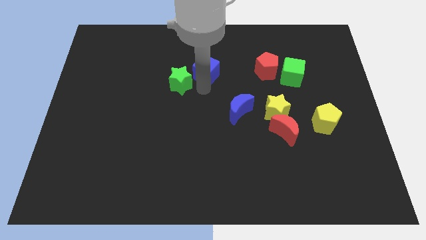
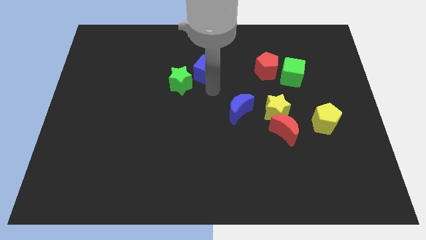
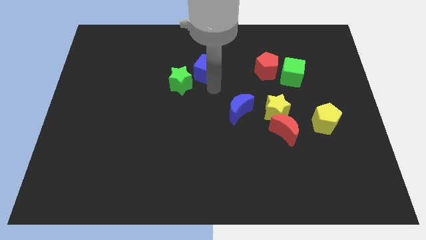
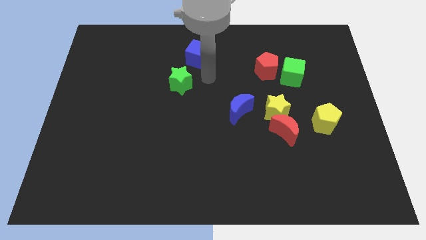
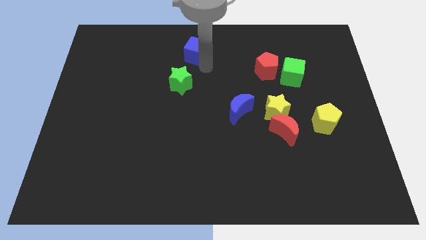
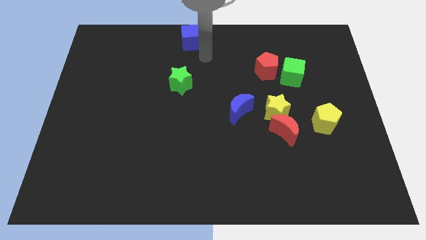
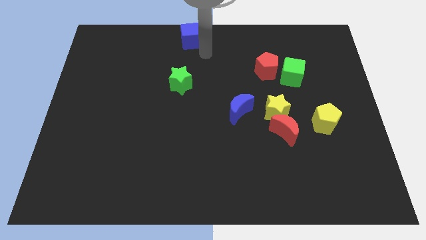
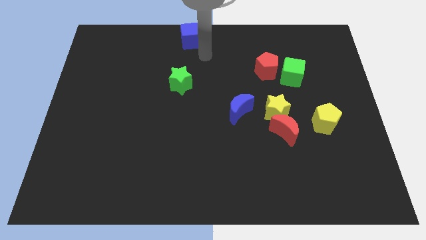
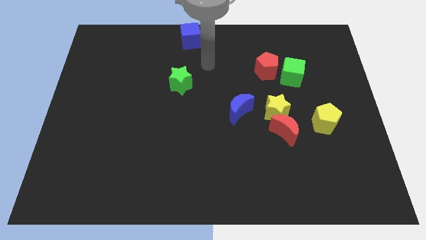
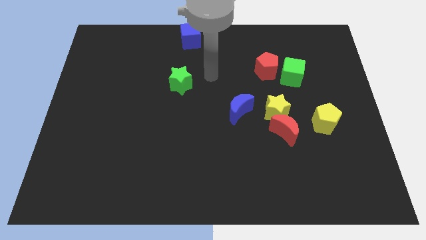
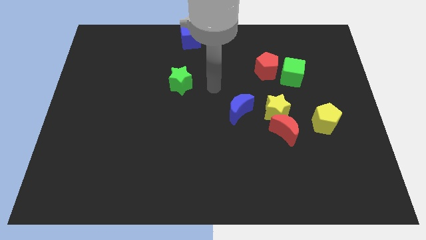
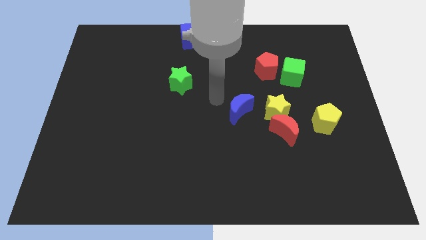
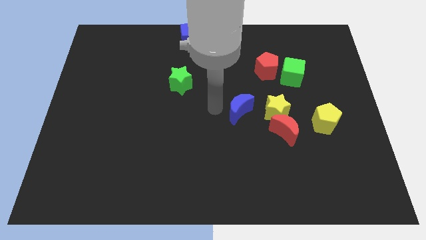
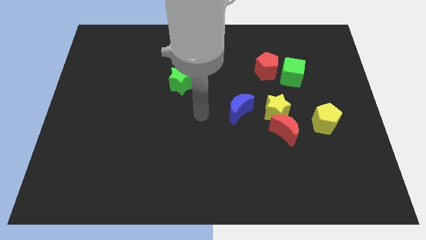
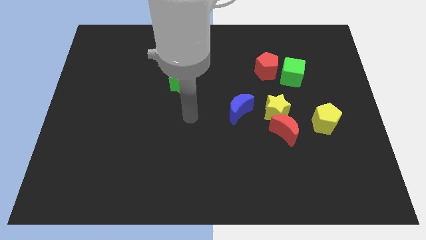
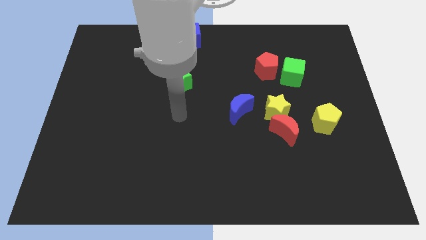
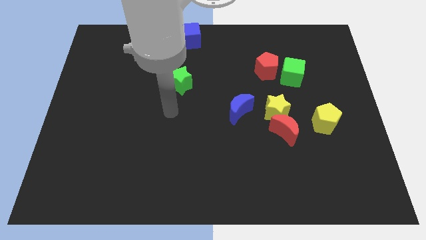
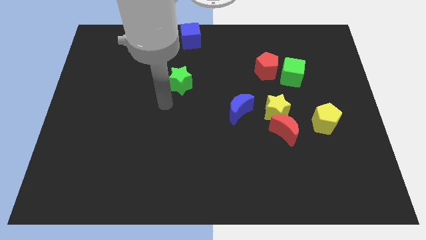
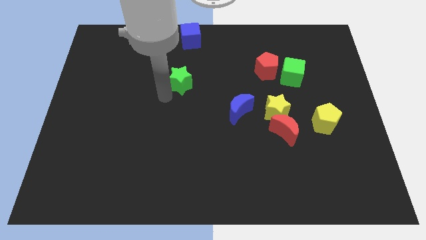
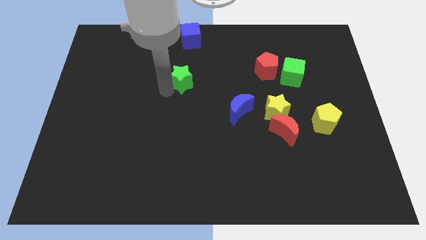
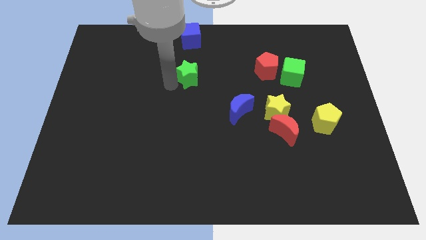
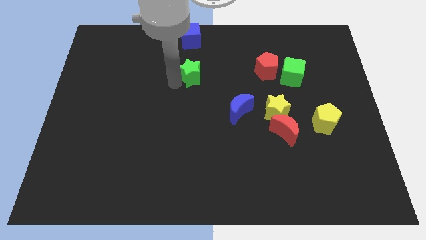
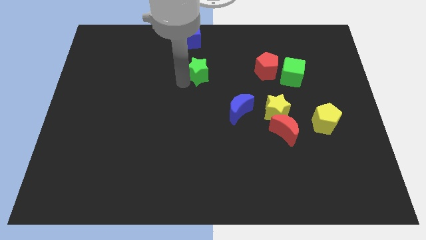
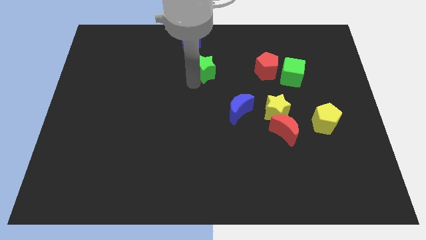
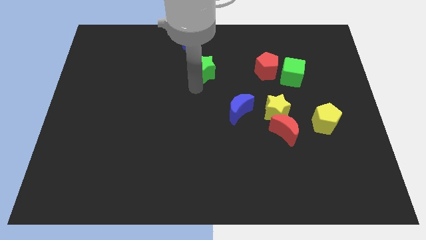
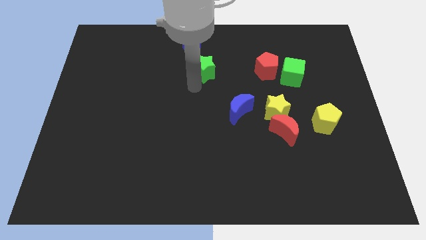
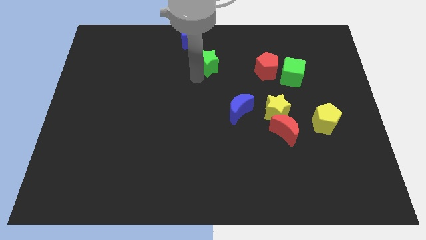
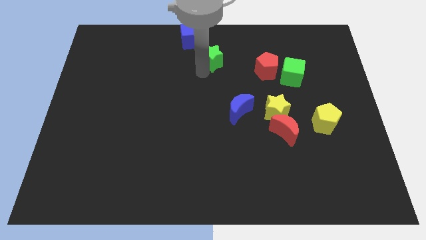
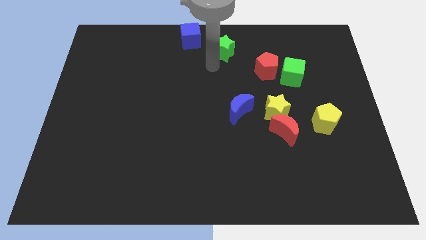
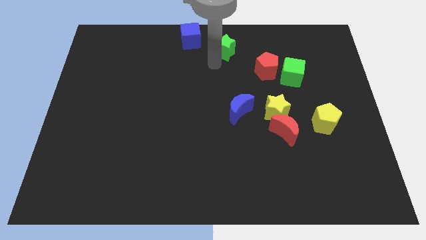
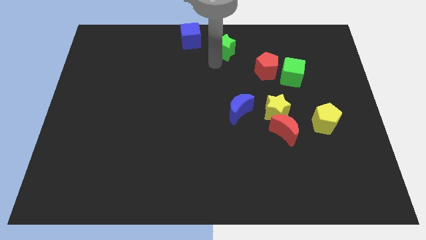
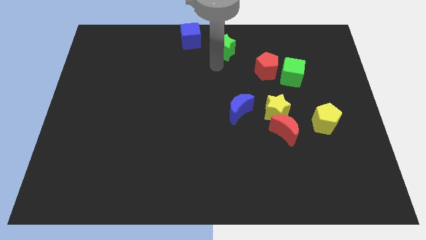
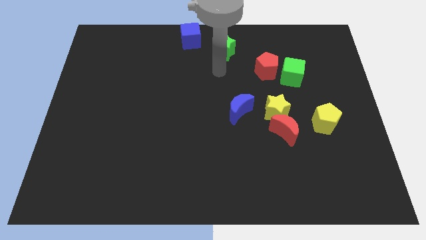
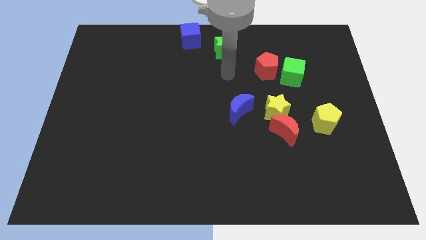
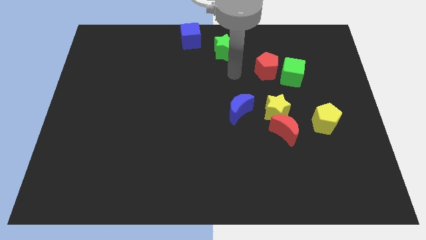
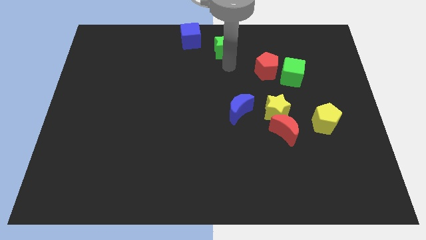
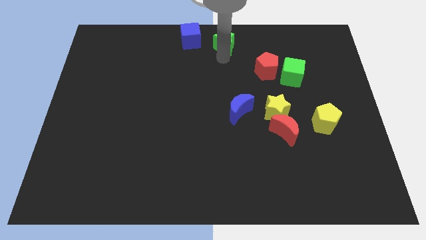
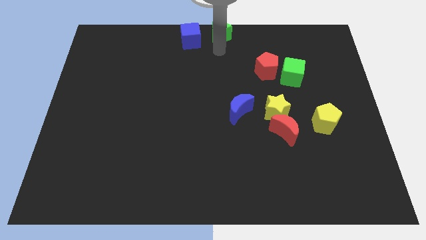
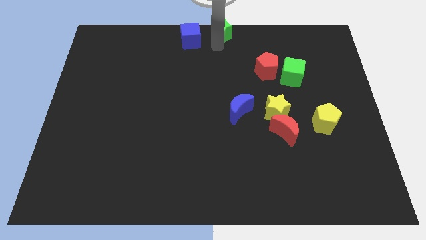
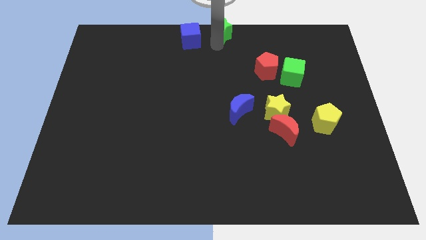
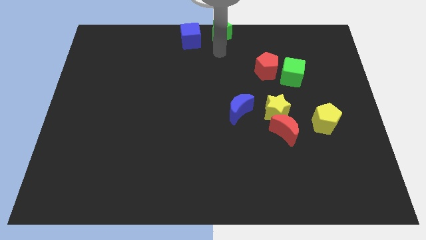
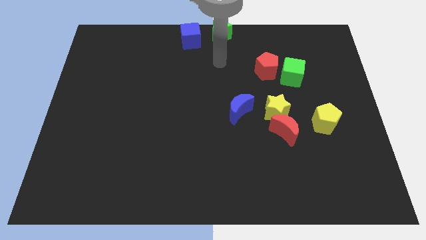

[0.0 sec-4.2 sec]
place the blue cube on top of the green star

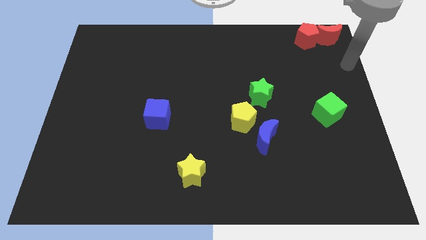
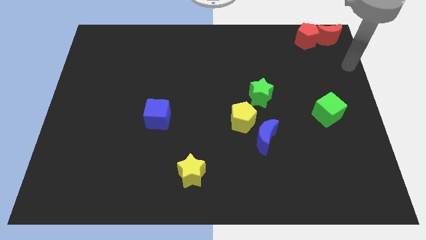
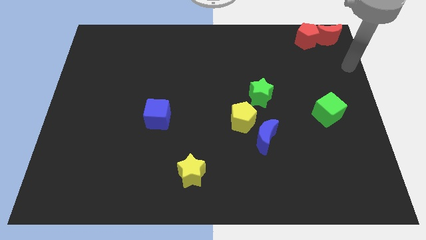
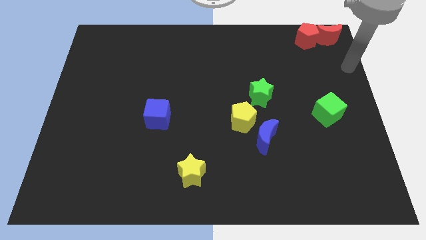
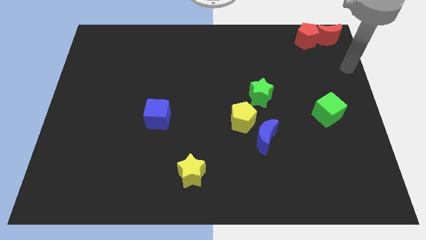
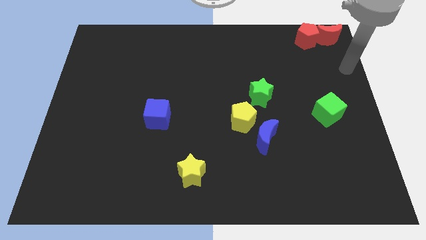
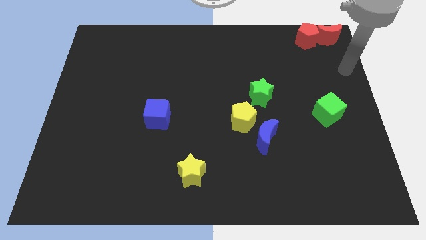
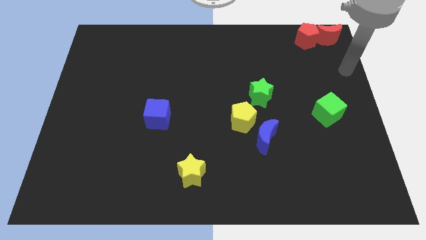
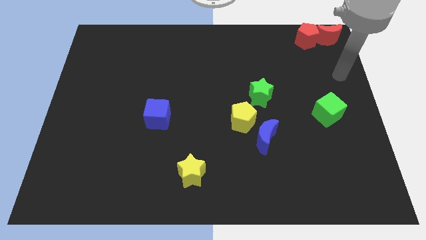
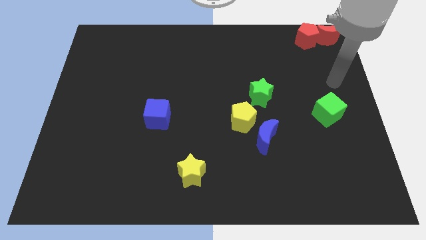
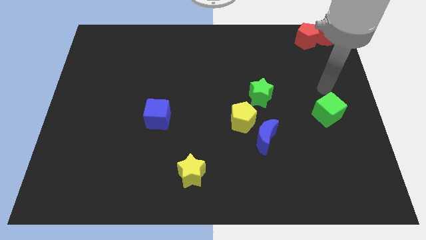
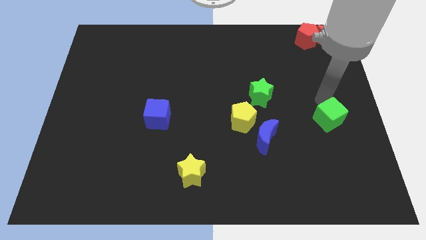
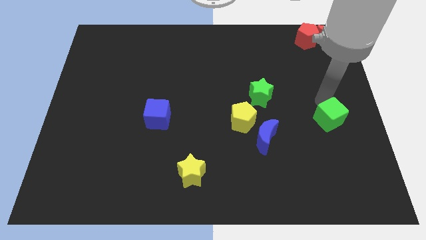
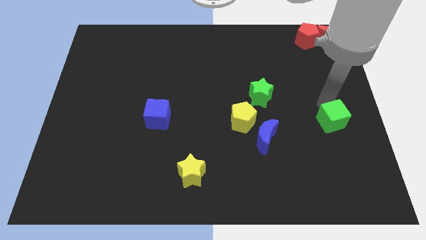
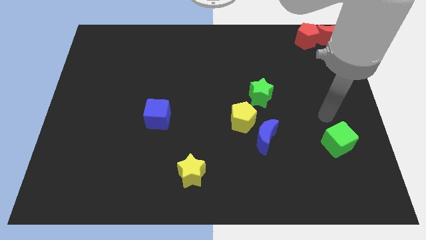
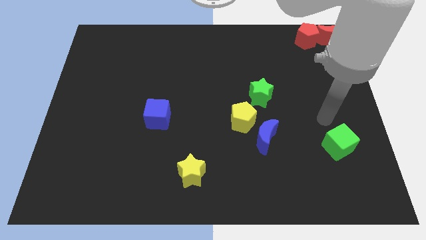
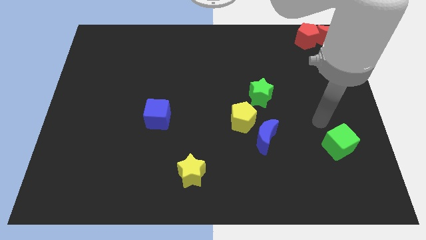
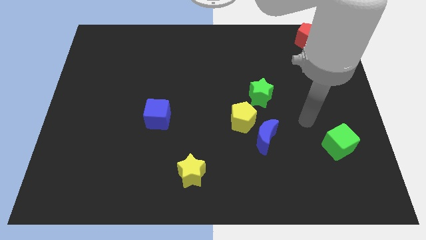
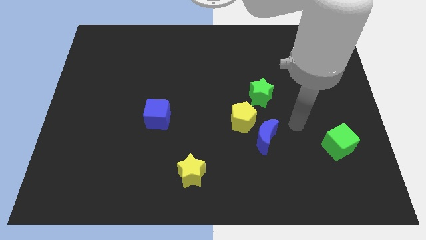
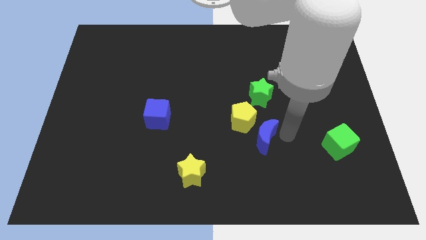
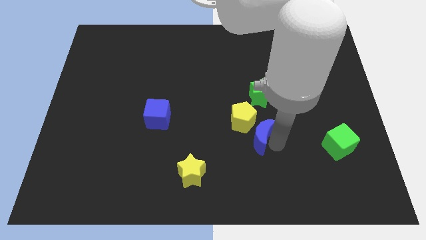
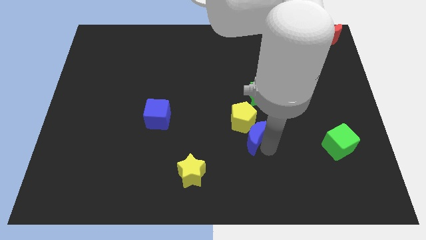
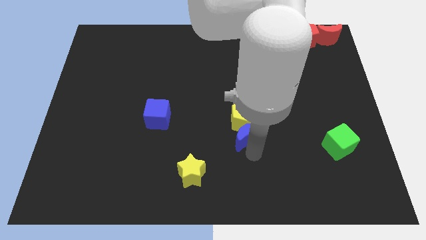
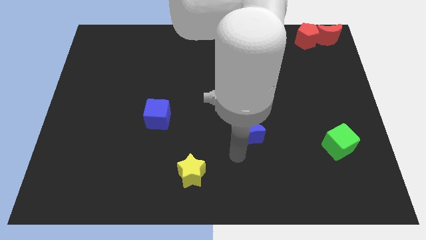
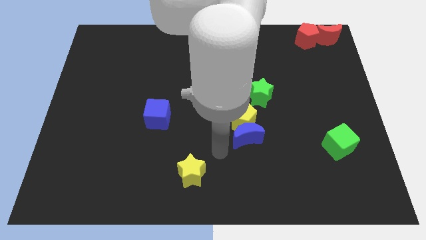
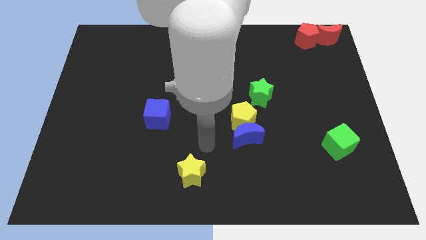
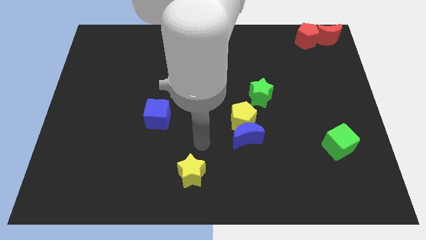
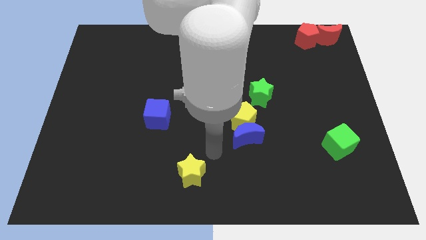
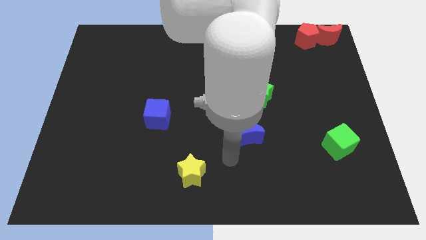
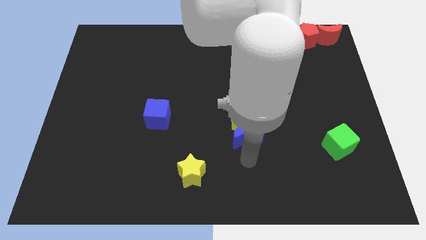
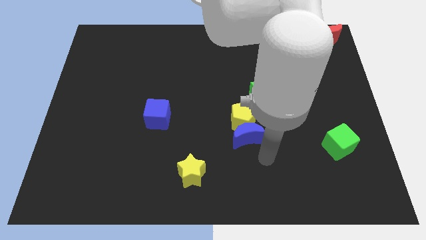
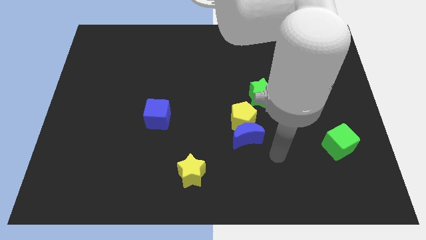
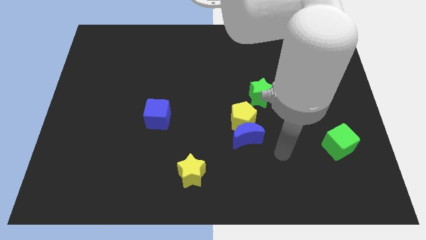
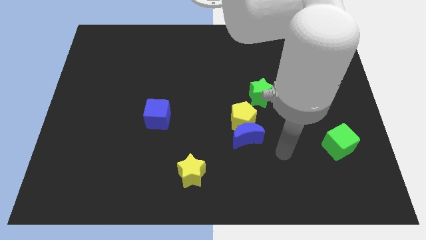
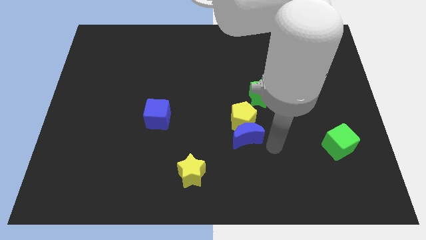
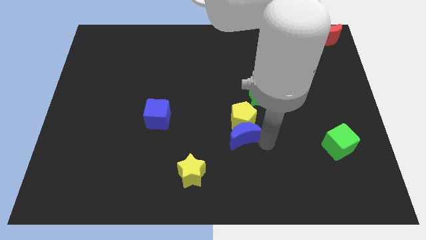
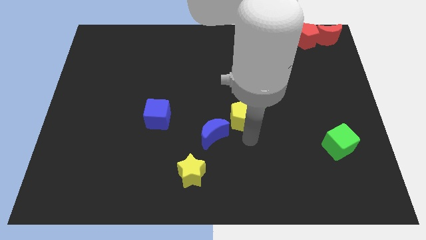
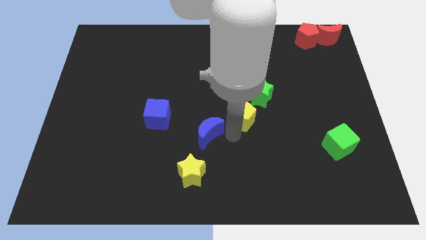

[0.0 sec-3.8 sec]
move blue moon slightly left

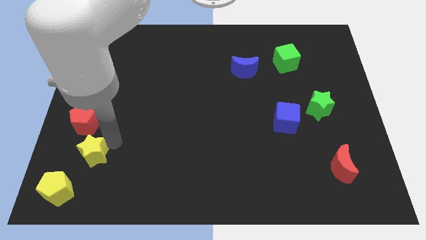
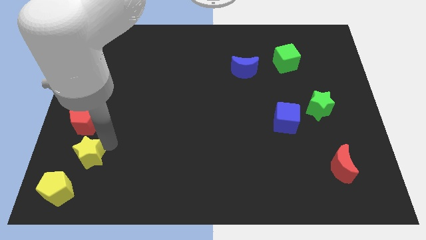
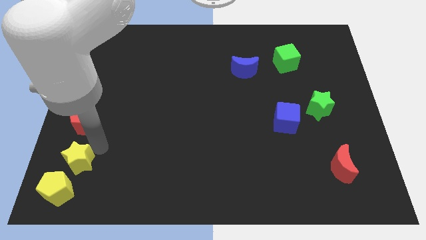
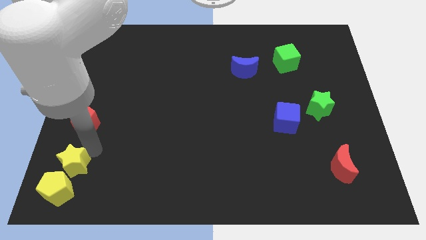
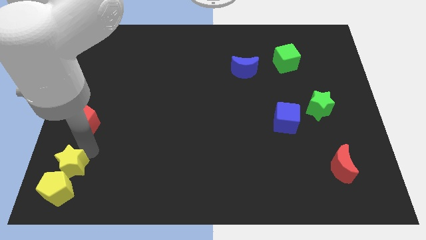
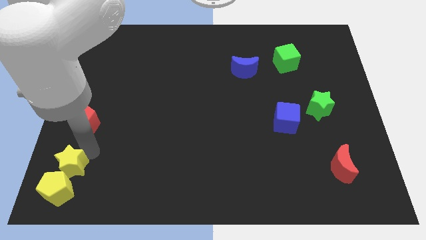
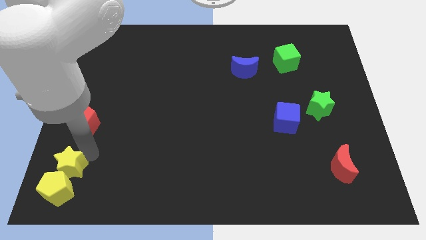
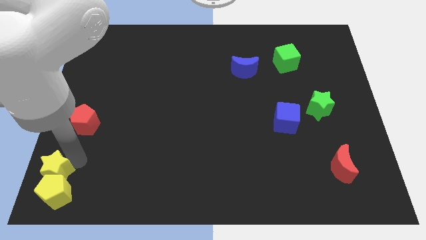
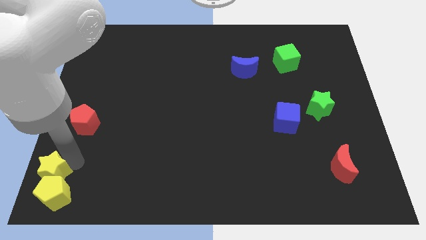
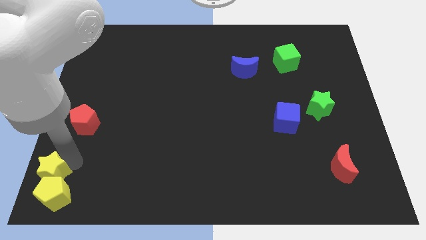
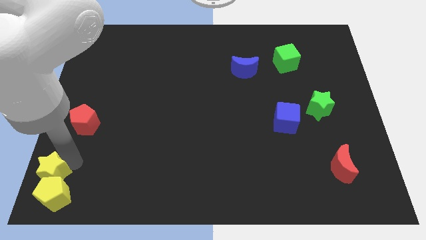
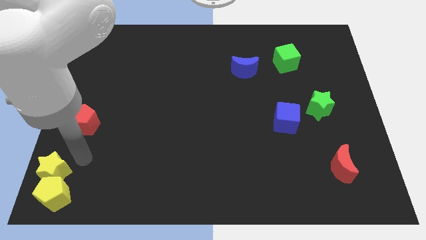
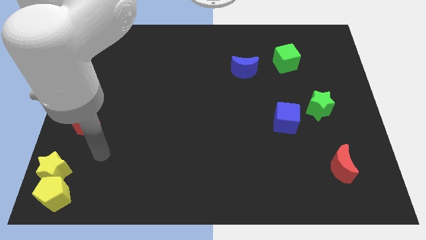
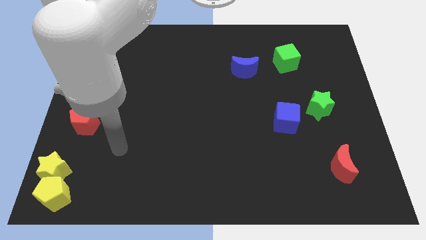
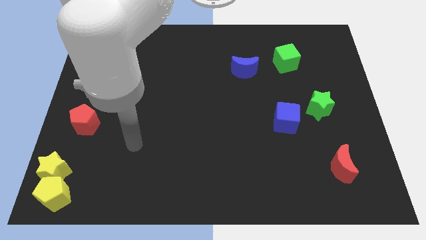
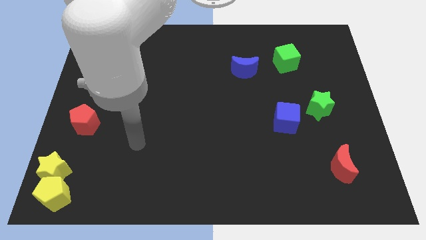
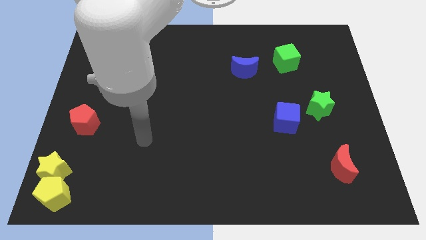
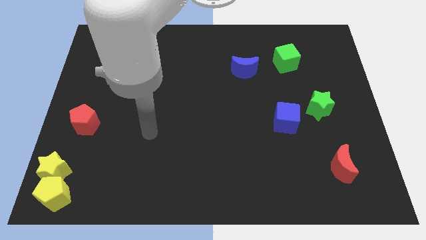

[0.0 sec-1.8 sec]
push the yellow star into the yellow pentagon
